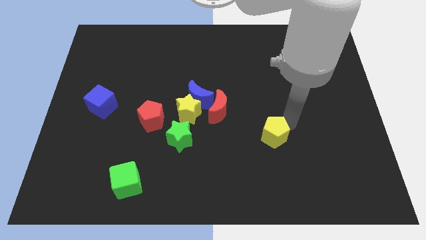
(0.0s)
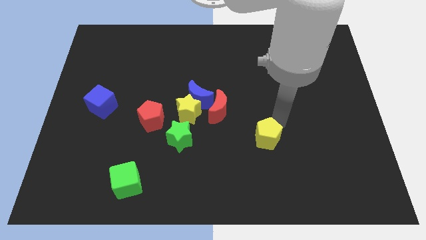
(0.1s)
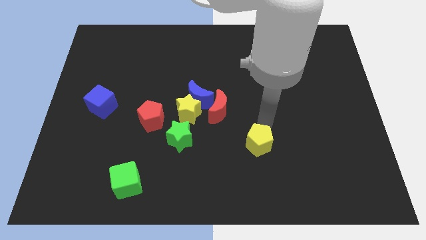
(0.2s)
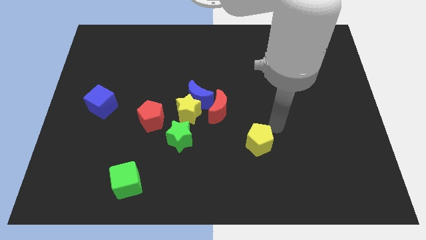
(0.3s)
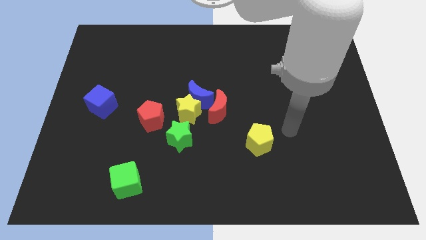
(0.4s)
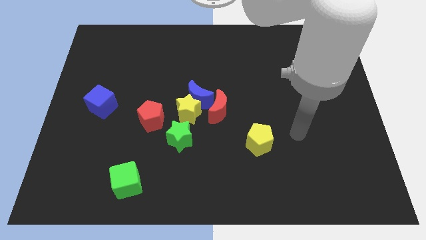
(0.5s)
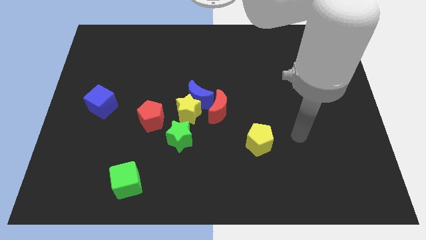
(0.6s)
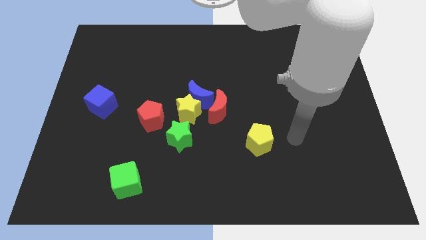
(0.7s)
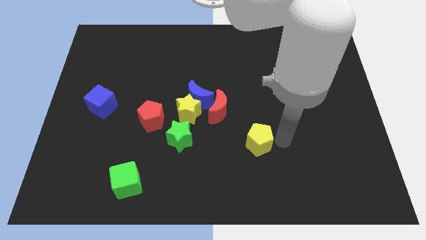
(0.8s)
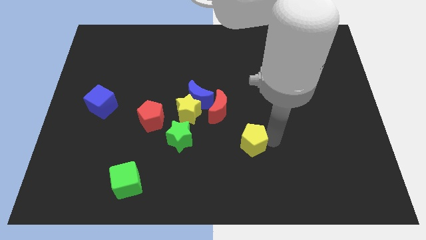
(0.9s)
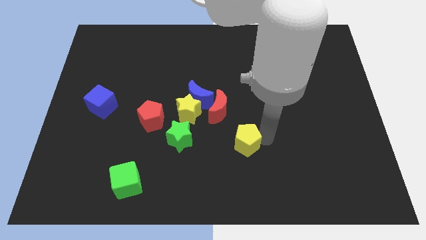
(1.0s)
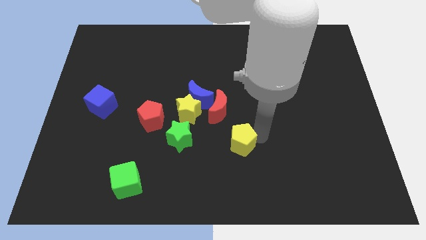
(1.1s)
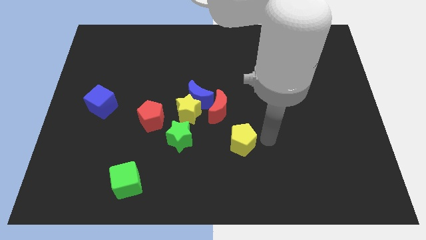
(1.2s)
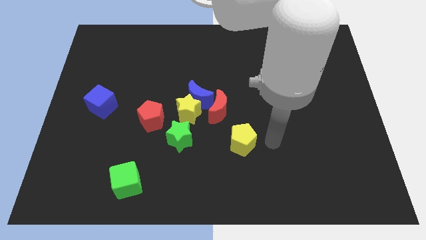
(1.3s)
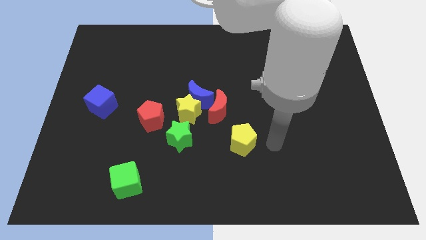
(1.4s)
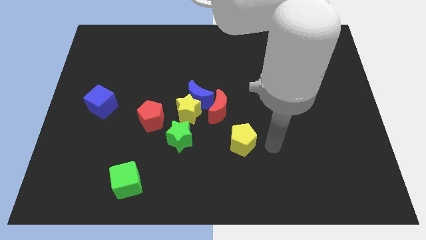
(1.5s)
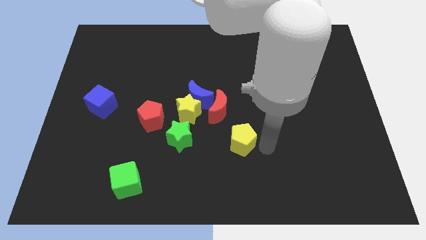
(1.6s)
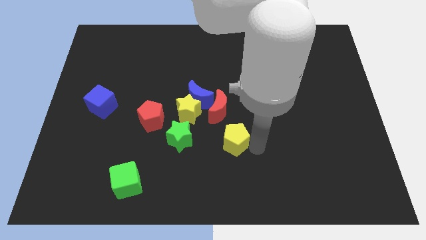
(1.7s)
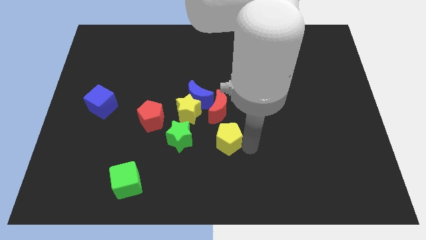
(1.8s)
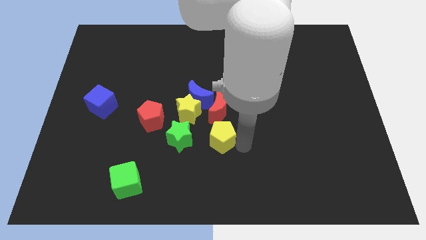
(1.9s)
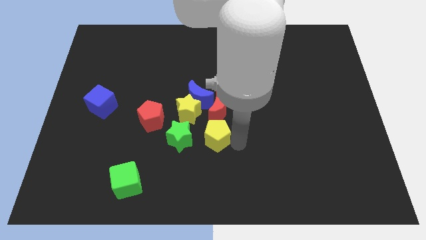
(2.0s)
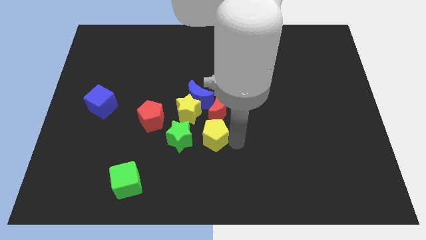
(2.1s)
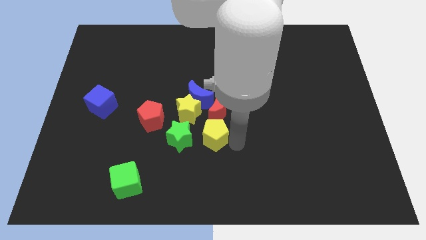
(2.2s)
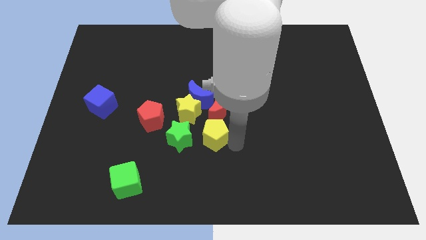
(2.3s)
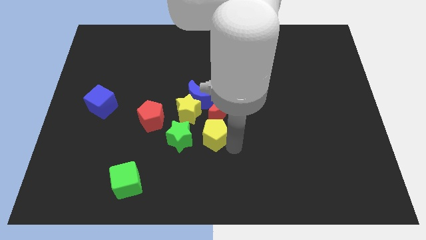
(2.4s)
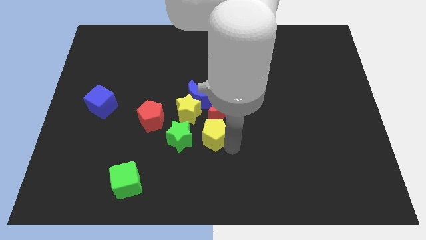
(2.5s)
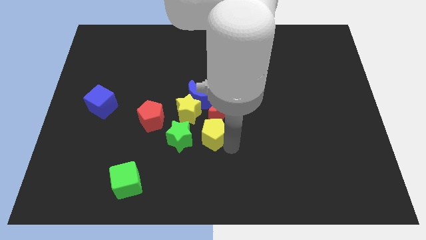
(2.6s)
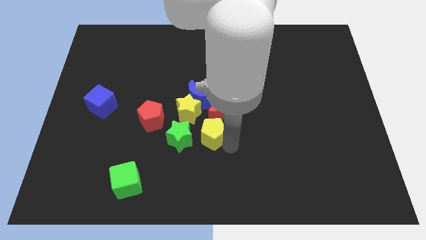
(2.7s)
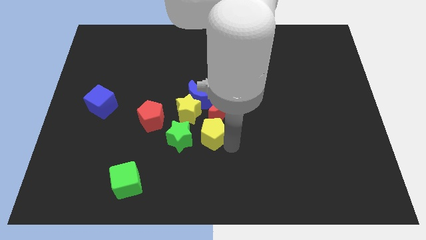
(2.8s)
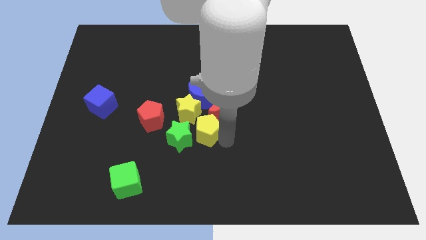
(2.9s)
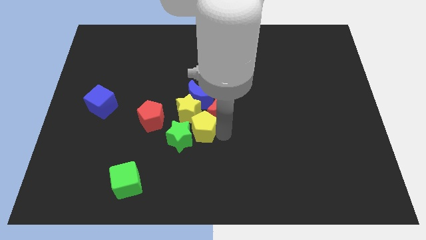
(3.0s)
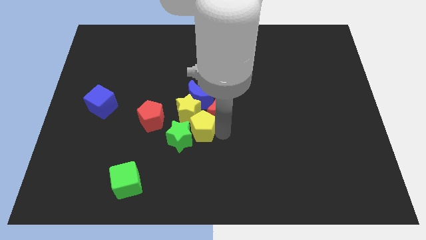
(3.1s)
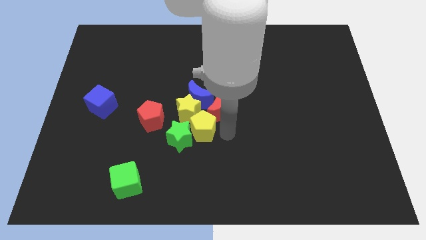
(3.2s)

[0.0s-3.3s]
push the yellow pentagon into the yellow star

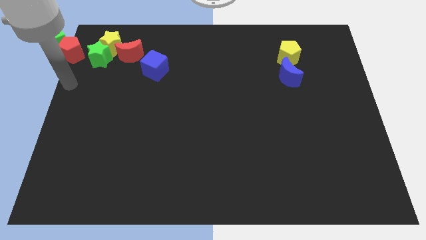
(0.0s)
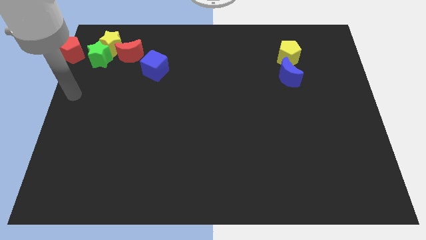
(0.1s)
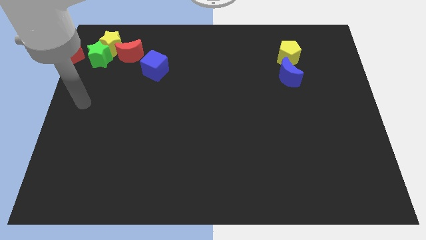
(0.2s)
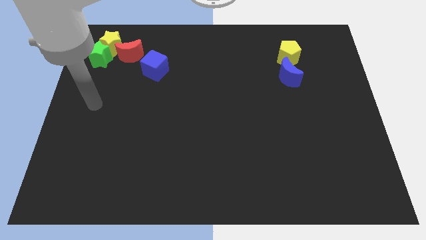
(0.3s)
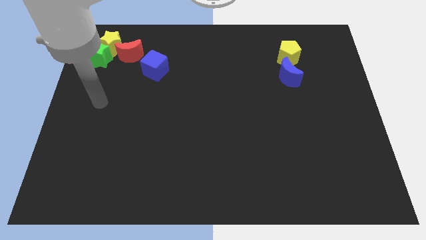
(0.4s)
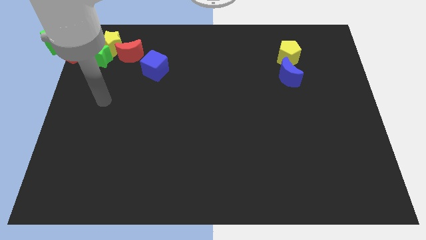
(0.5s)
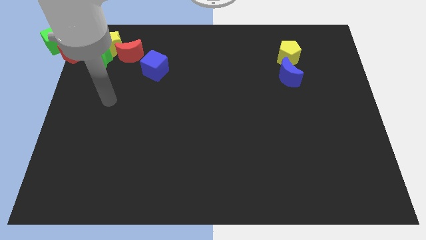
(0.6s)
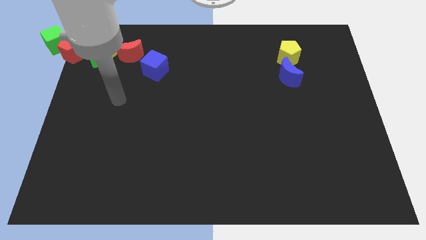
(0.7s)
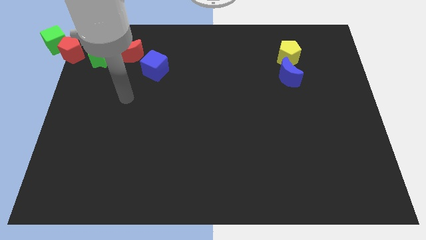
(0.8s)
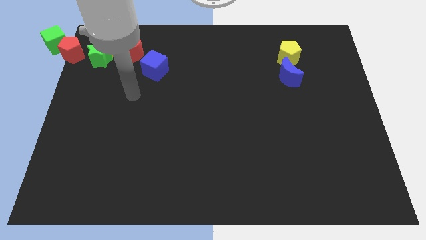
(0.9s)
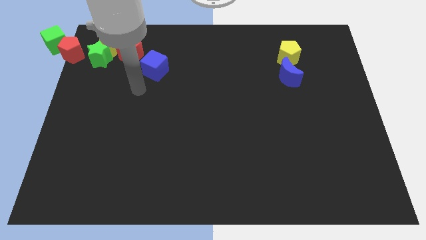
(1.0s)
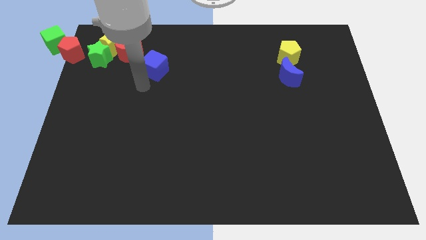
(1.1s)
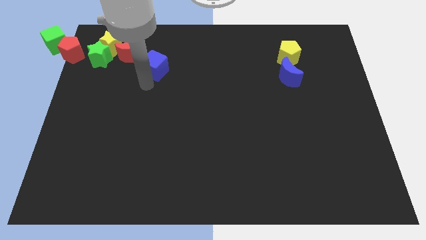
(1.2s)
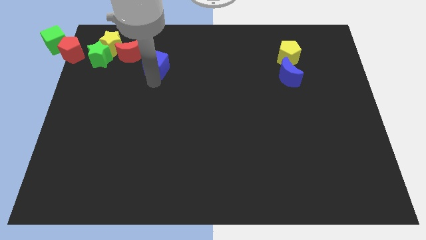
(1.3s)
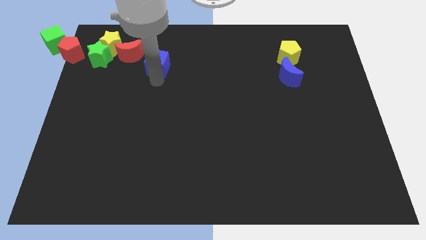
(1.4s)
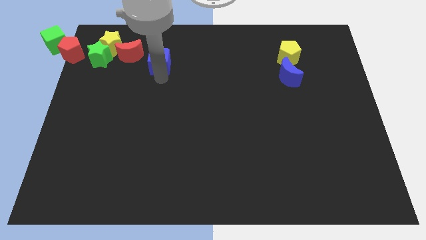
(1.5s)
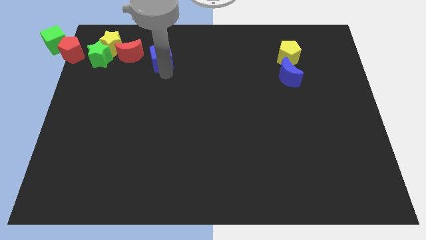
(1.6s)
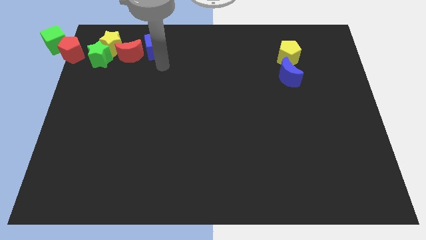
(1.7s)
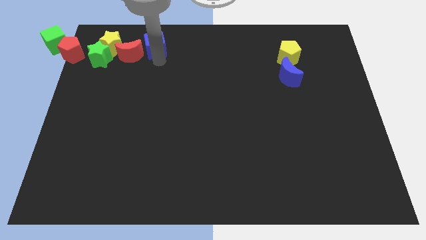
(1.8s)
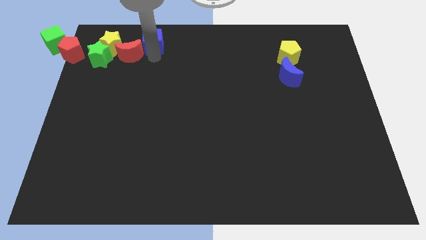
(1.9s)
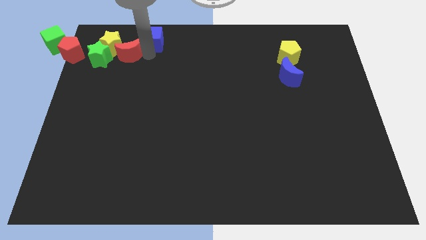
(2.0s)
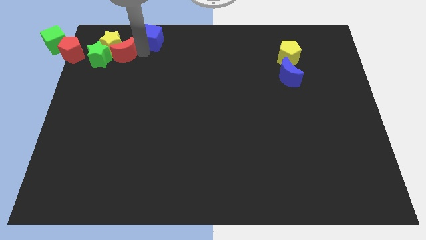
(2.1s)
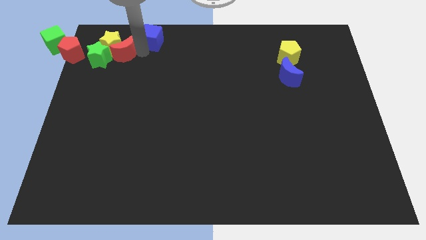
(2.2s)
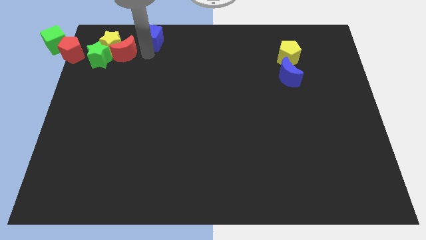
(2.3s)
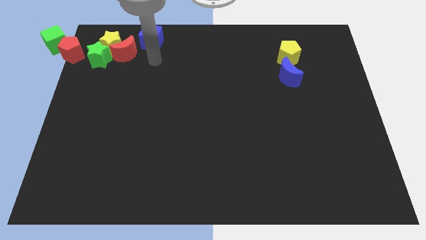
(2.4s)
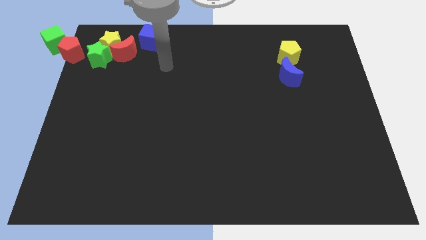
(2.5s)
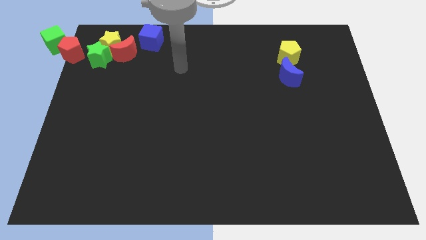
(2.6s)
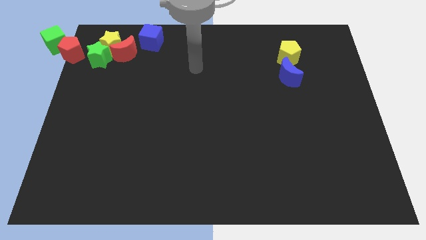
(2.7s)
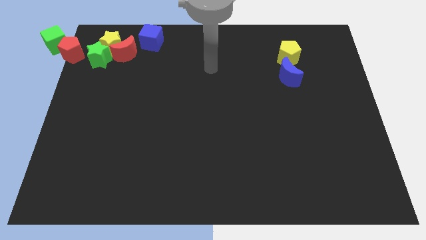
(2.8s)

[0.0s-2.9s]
push the blue cube right to the red moon

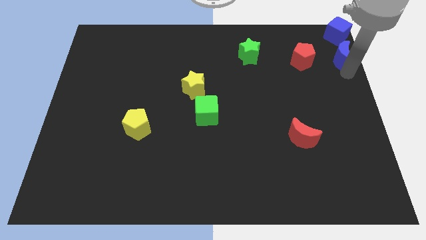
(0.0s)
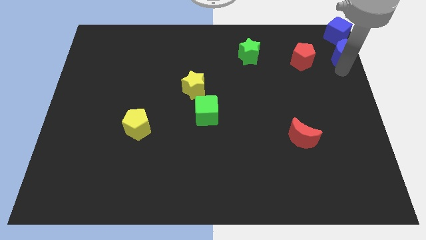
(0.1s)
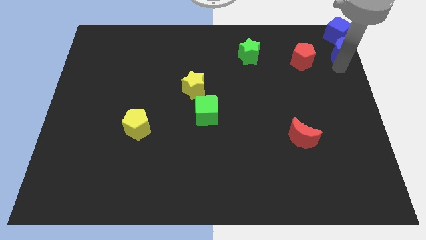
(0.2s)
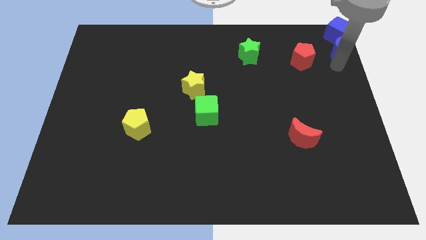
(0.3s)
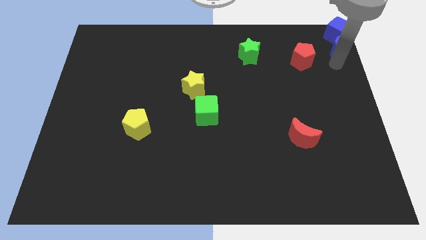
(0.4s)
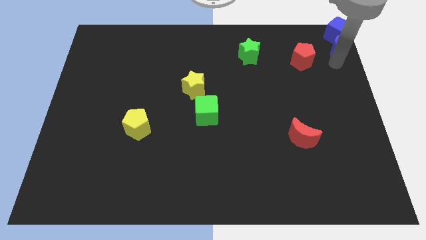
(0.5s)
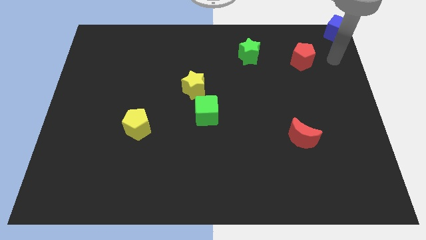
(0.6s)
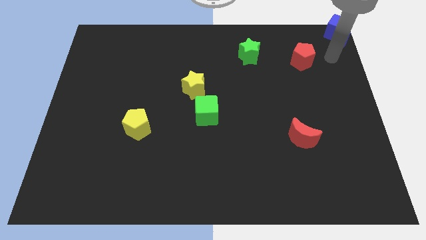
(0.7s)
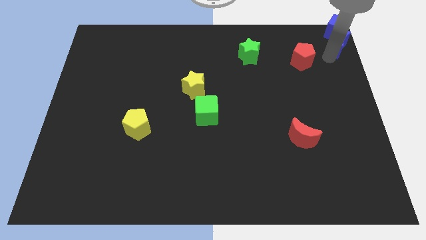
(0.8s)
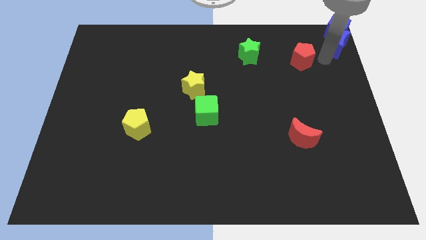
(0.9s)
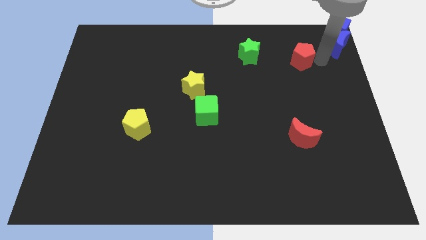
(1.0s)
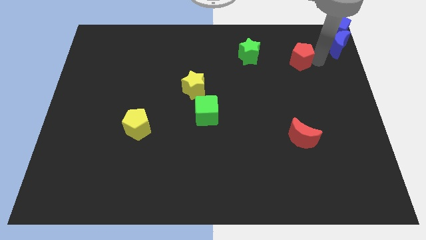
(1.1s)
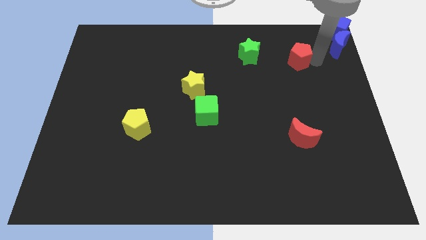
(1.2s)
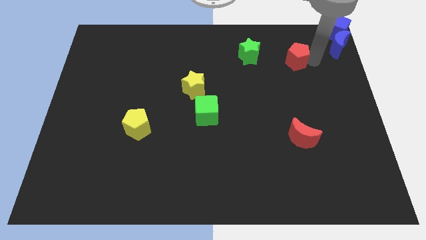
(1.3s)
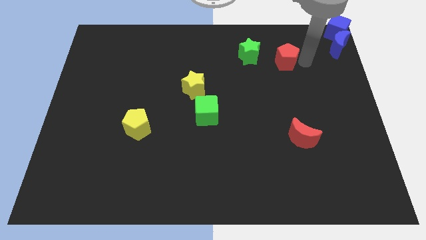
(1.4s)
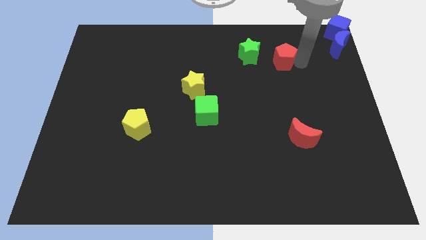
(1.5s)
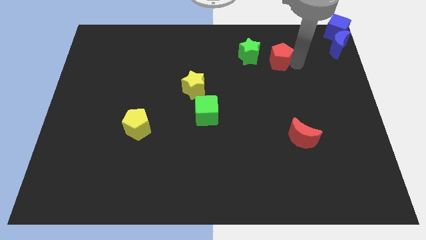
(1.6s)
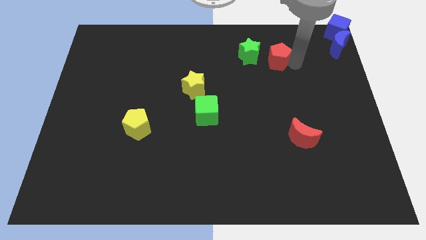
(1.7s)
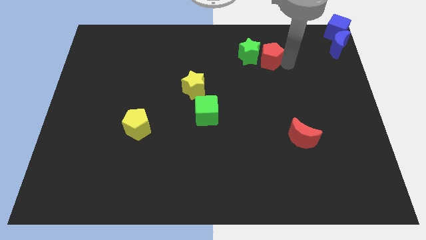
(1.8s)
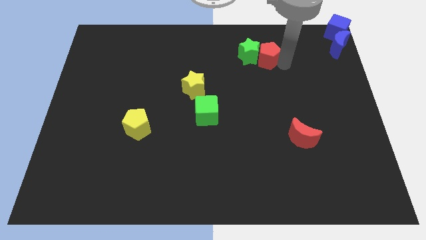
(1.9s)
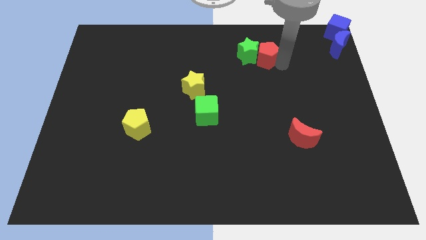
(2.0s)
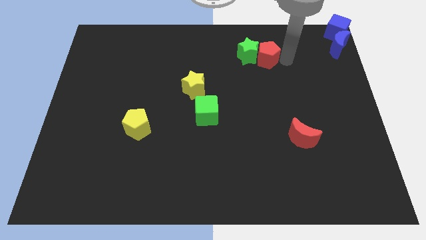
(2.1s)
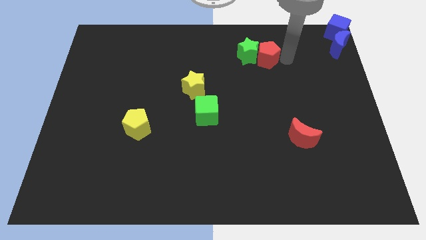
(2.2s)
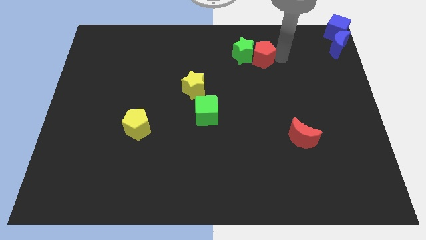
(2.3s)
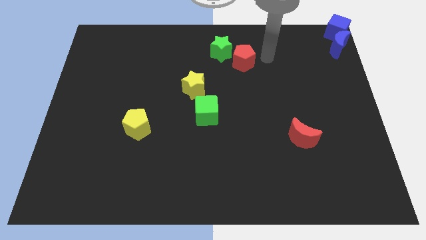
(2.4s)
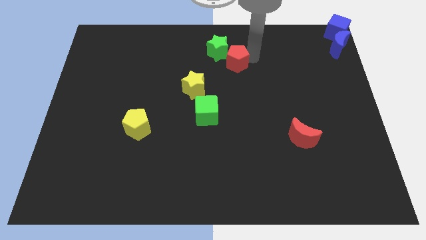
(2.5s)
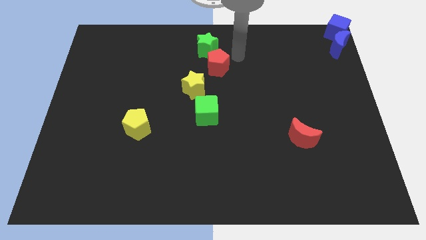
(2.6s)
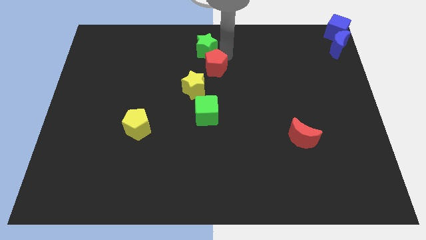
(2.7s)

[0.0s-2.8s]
push the red pentagon into the green star
